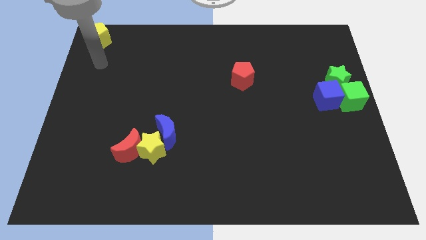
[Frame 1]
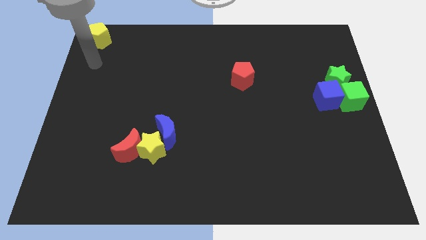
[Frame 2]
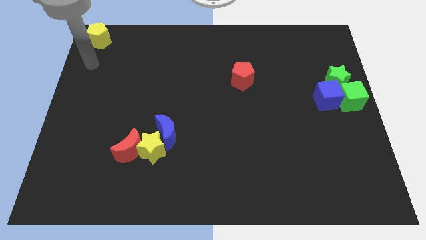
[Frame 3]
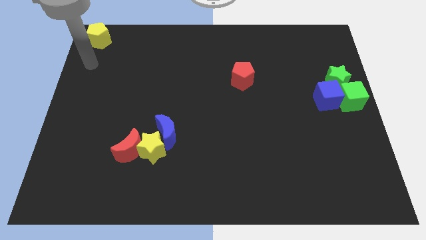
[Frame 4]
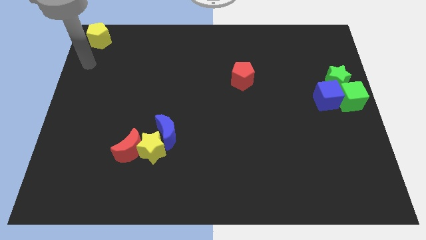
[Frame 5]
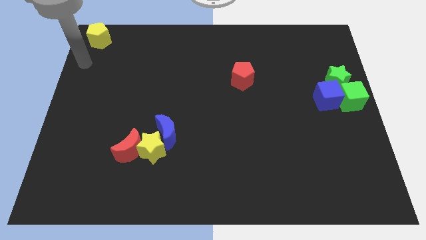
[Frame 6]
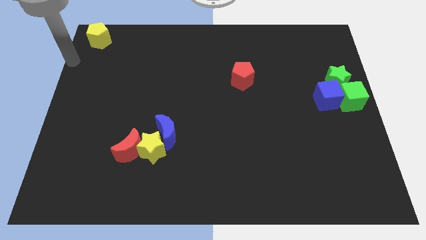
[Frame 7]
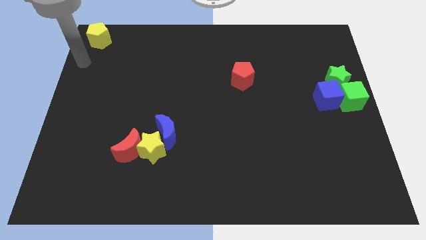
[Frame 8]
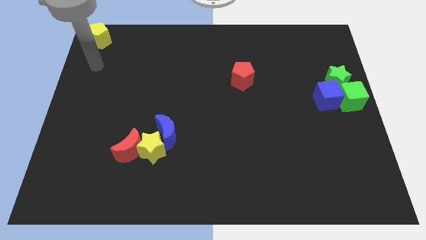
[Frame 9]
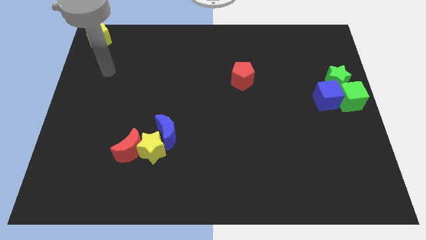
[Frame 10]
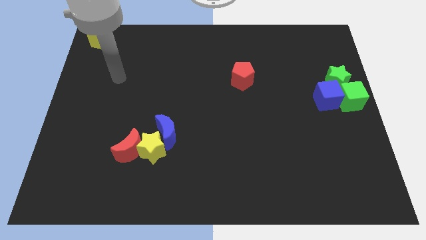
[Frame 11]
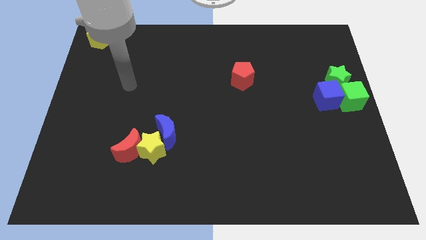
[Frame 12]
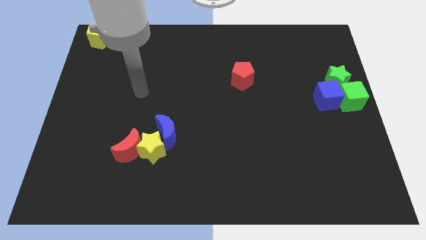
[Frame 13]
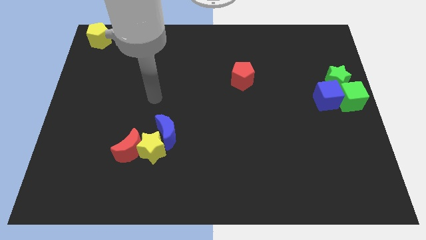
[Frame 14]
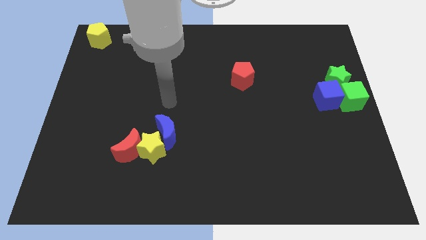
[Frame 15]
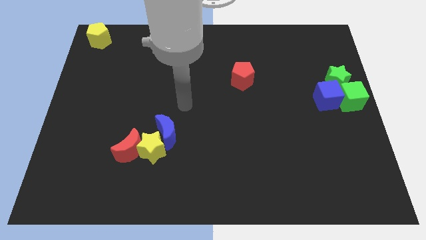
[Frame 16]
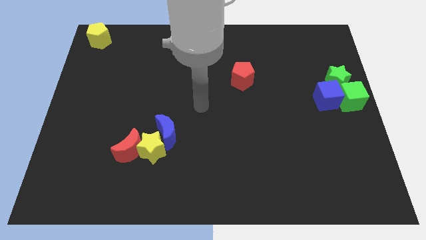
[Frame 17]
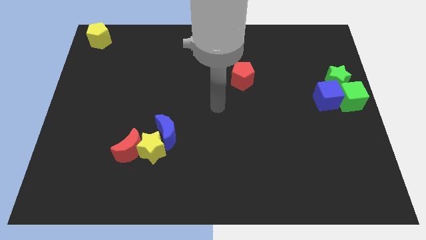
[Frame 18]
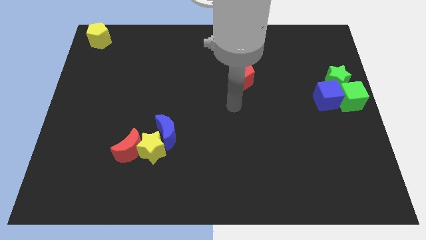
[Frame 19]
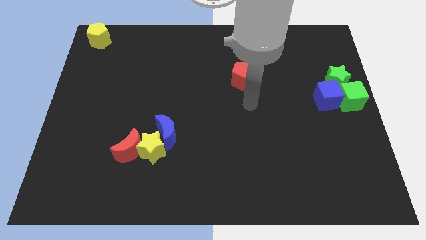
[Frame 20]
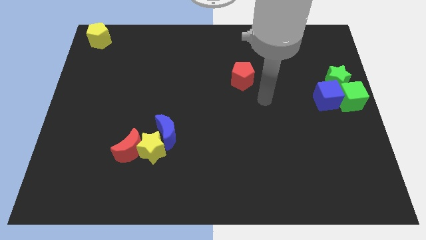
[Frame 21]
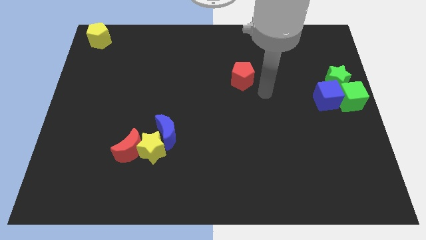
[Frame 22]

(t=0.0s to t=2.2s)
move your hand away from yellow pentagon

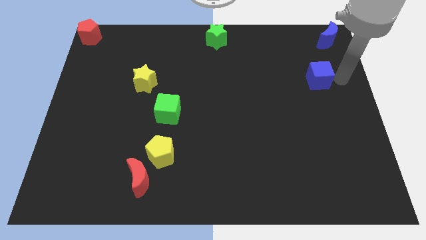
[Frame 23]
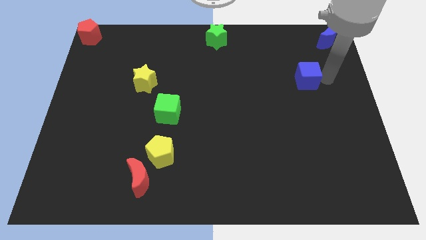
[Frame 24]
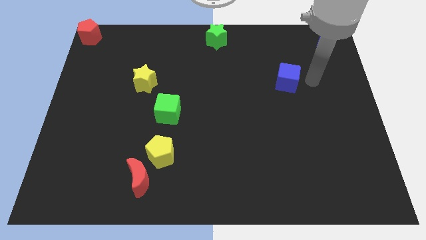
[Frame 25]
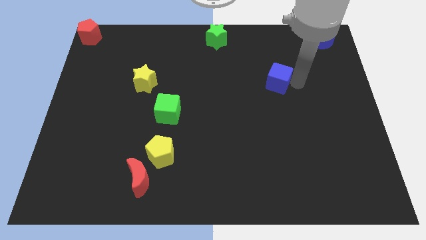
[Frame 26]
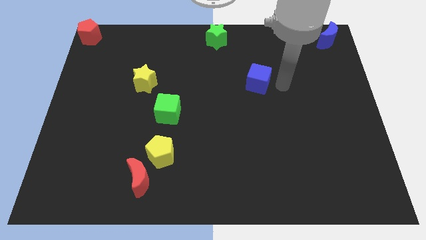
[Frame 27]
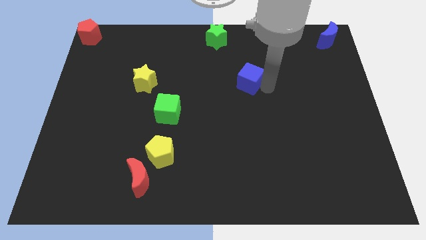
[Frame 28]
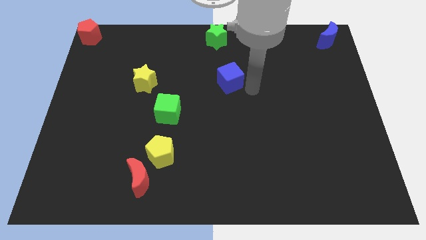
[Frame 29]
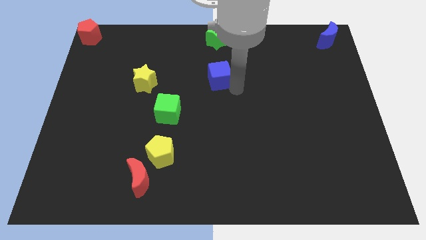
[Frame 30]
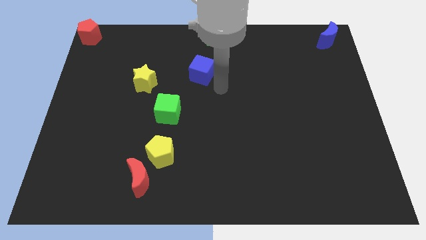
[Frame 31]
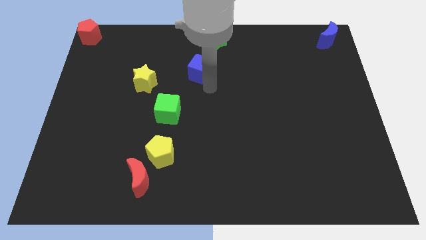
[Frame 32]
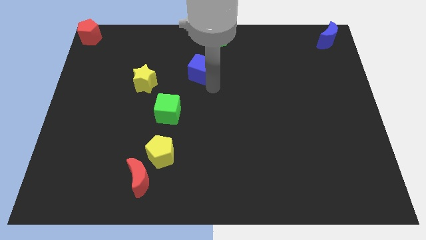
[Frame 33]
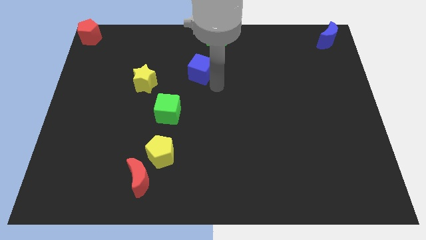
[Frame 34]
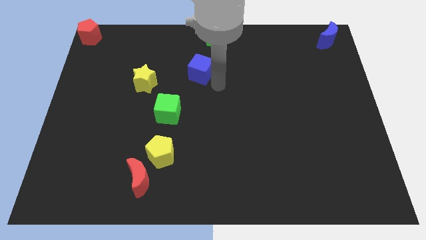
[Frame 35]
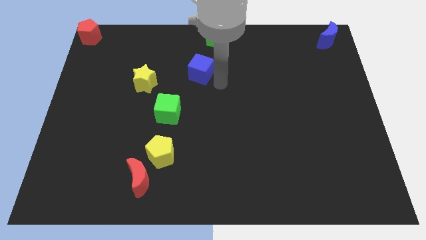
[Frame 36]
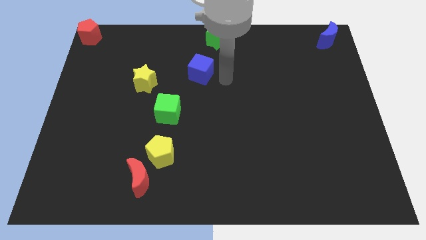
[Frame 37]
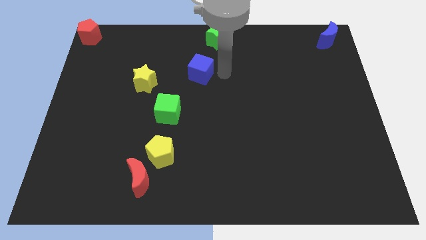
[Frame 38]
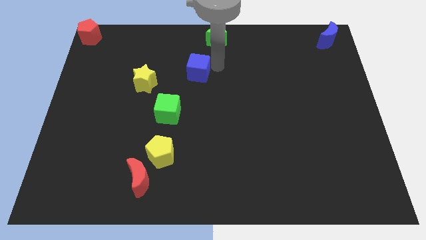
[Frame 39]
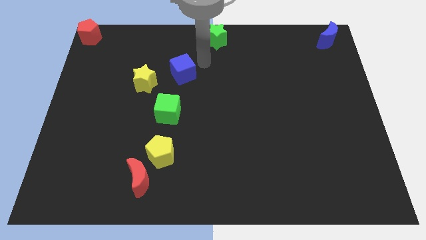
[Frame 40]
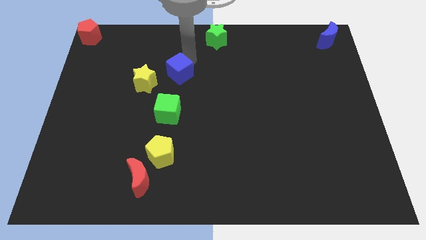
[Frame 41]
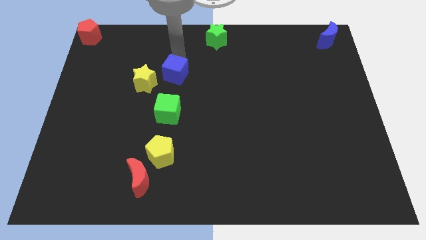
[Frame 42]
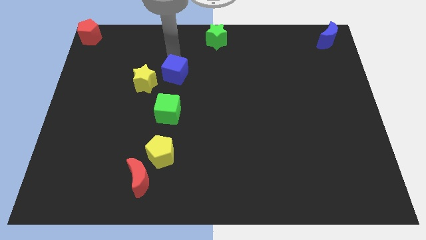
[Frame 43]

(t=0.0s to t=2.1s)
place the blue cube on top of the green cube

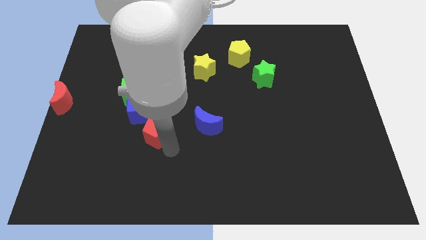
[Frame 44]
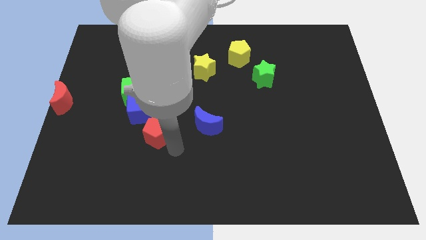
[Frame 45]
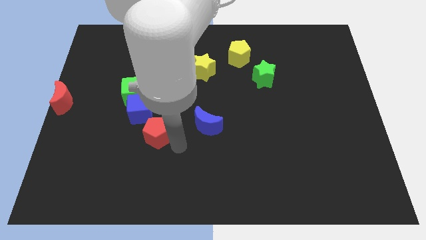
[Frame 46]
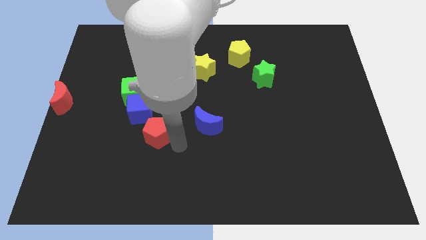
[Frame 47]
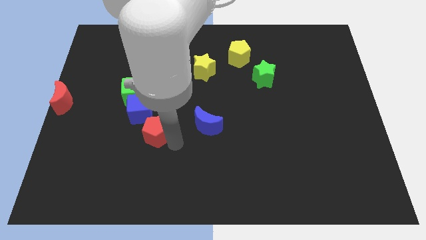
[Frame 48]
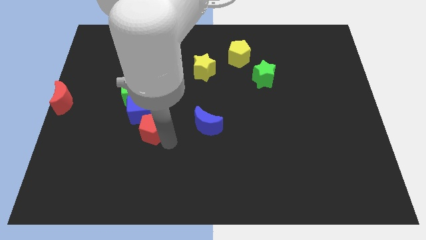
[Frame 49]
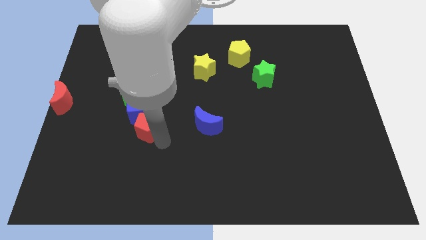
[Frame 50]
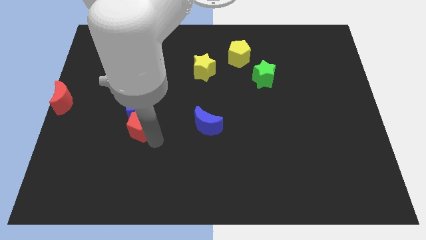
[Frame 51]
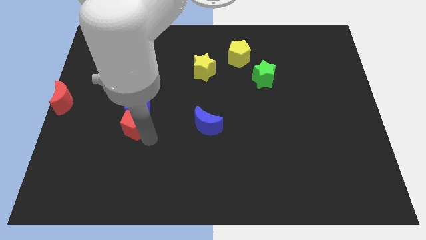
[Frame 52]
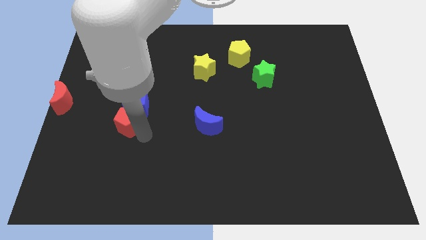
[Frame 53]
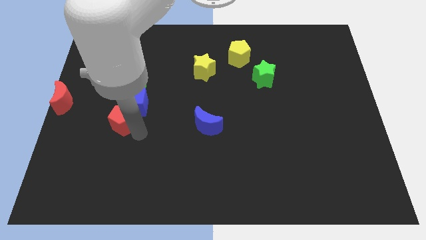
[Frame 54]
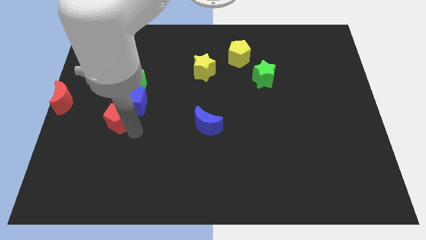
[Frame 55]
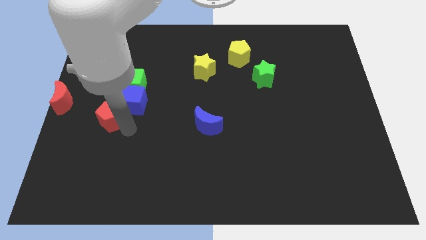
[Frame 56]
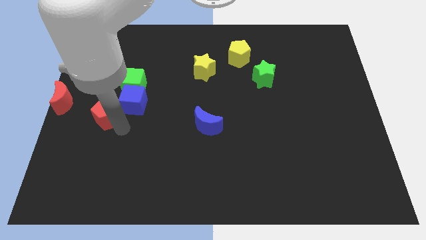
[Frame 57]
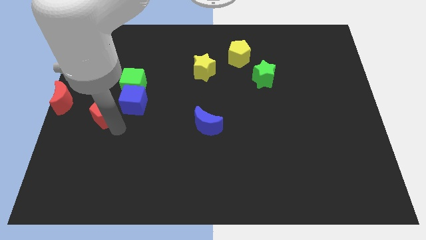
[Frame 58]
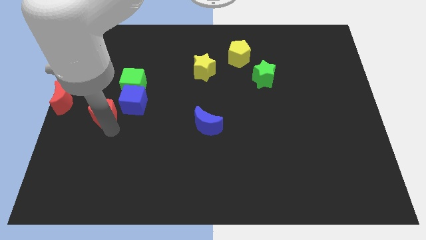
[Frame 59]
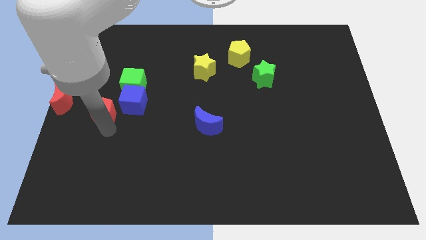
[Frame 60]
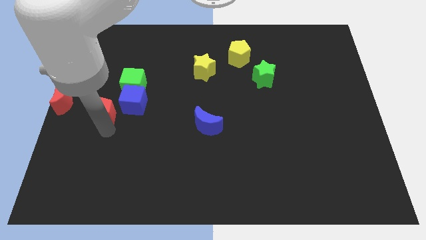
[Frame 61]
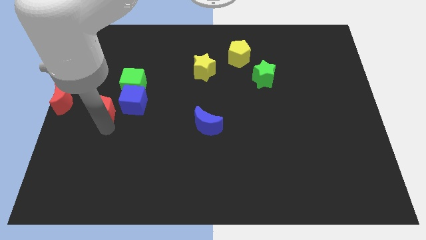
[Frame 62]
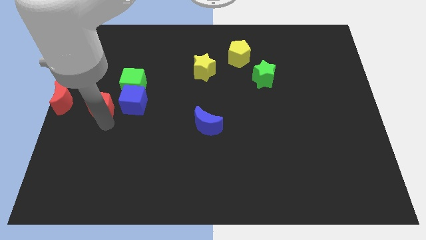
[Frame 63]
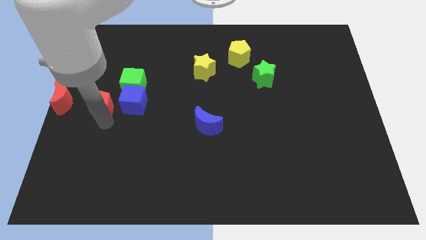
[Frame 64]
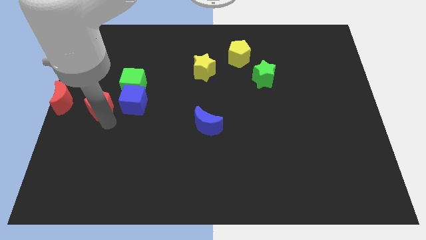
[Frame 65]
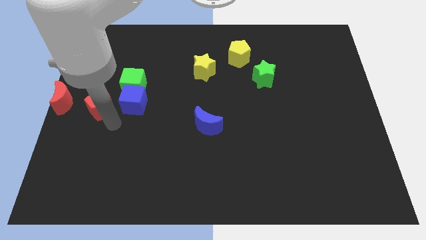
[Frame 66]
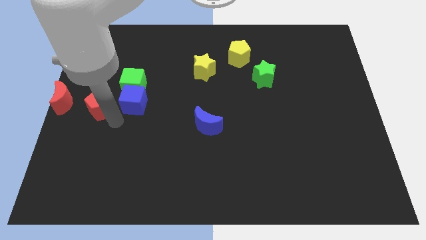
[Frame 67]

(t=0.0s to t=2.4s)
place the red pentagon to the left side of the blue cube

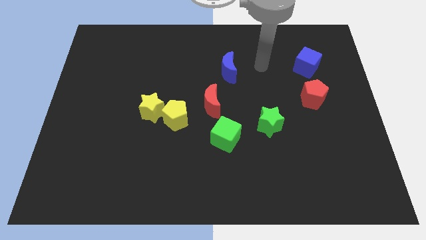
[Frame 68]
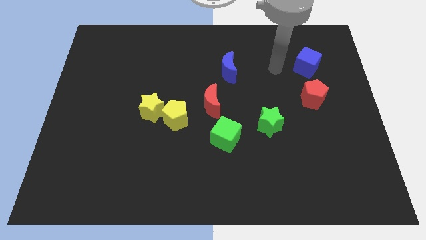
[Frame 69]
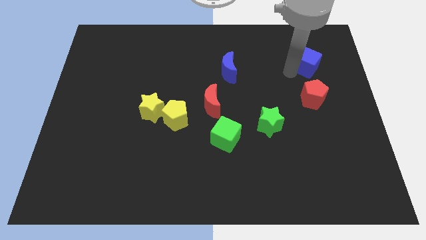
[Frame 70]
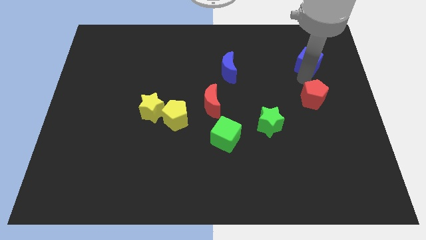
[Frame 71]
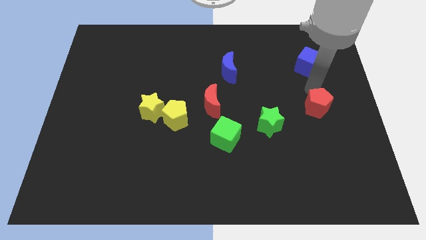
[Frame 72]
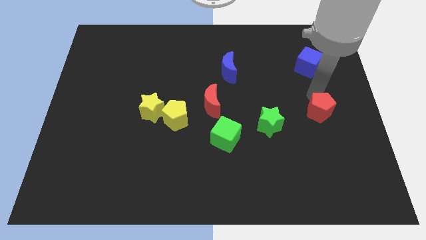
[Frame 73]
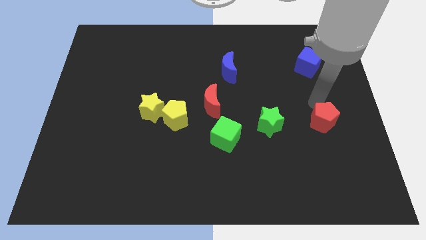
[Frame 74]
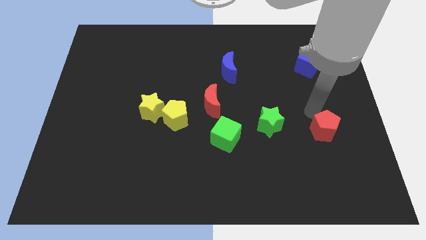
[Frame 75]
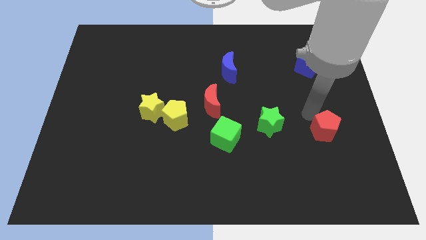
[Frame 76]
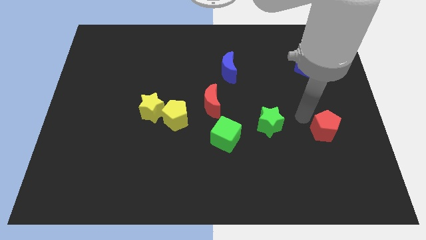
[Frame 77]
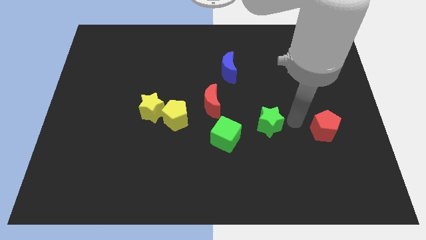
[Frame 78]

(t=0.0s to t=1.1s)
move the red pentagon slightly to the bottom side

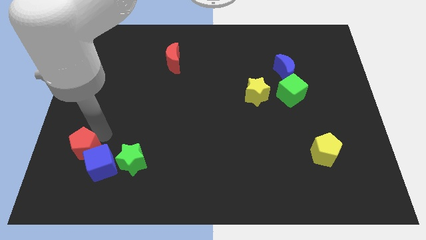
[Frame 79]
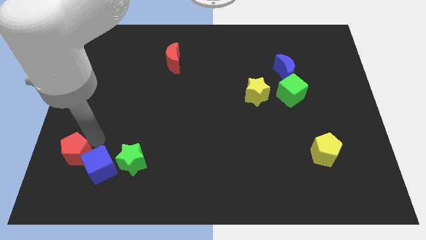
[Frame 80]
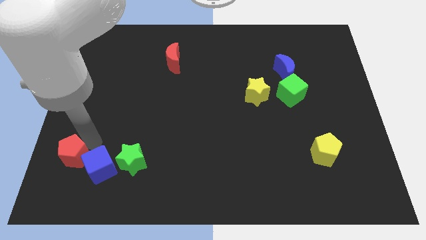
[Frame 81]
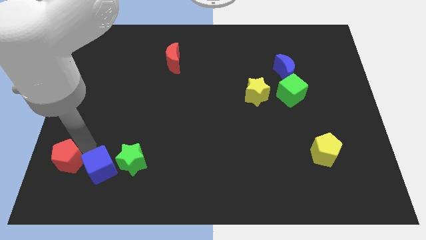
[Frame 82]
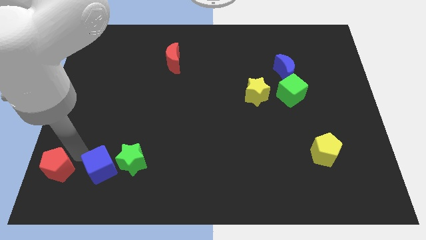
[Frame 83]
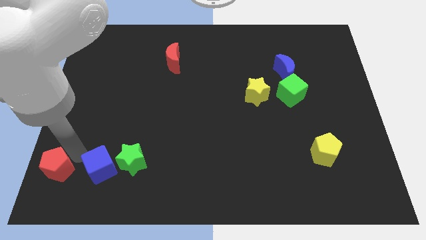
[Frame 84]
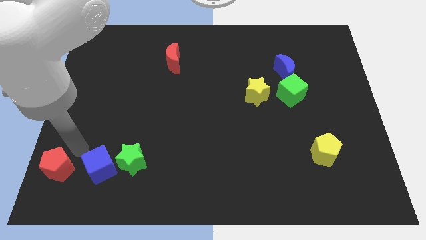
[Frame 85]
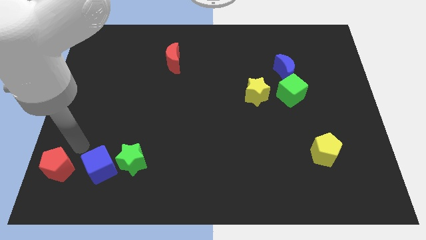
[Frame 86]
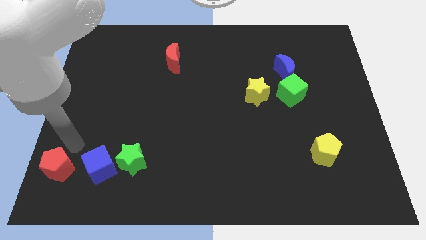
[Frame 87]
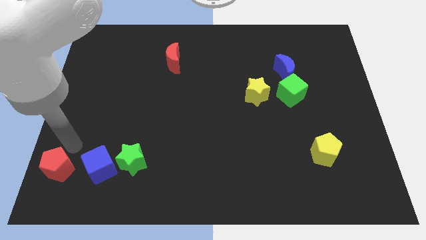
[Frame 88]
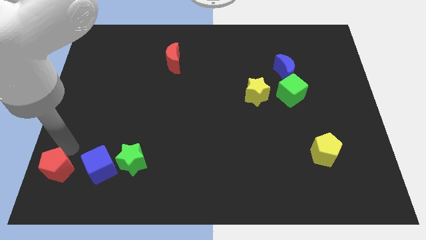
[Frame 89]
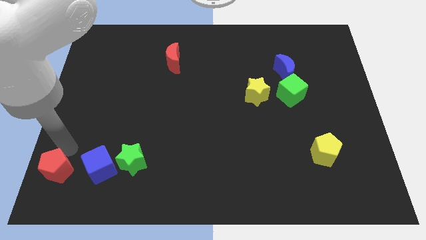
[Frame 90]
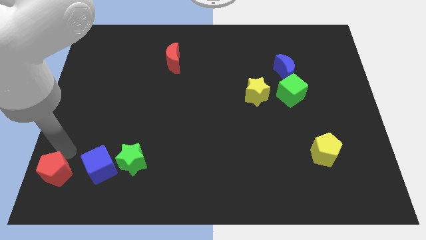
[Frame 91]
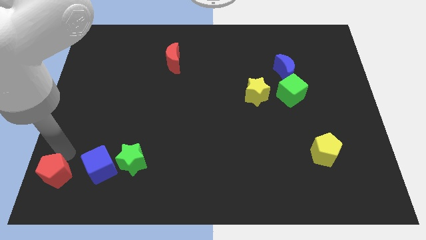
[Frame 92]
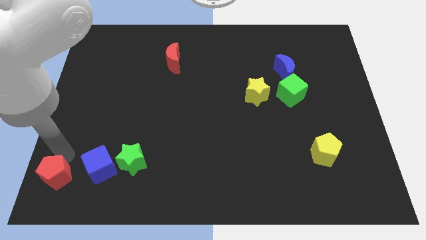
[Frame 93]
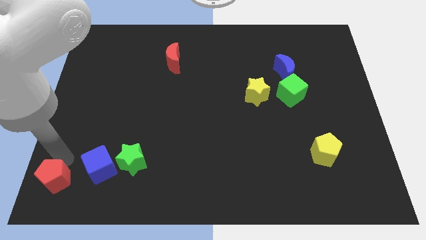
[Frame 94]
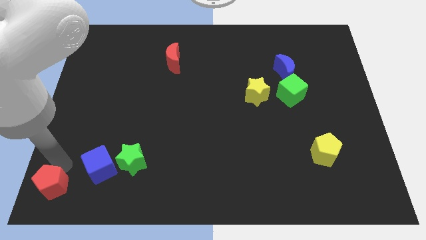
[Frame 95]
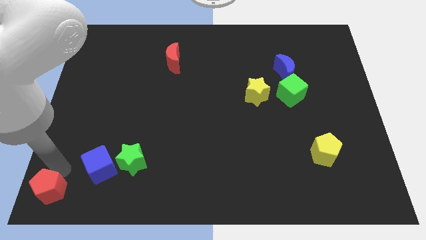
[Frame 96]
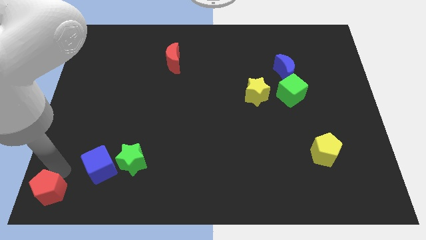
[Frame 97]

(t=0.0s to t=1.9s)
place the red pentagon at the bottom left side of blue cube
